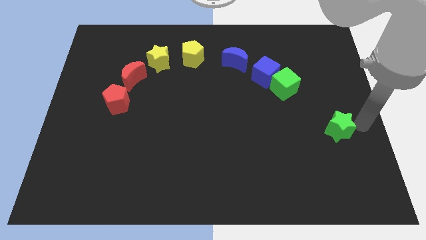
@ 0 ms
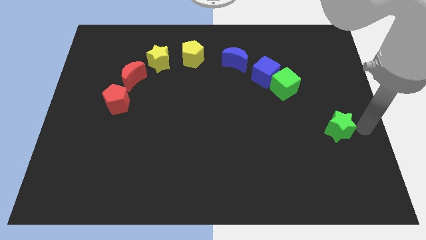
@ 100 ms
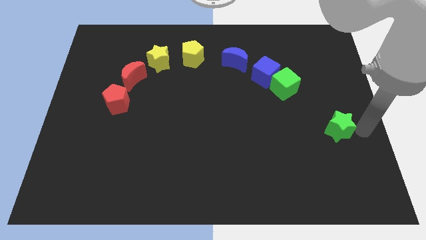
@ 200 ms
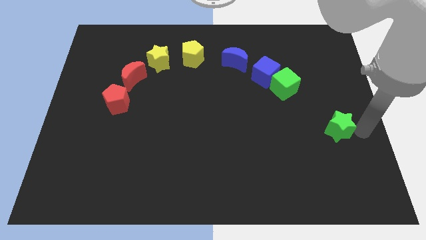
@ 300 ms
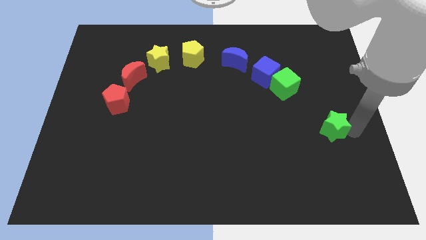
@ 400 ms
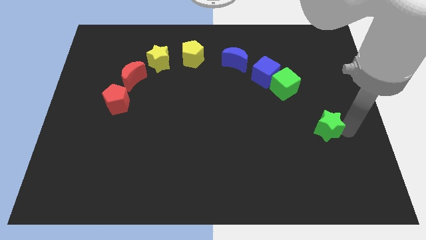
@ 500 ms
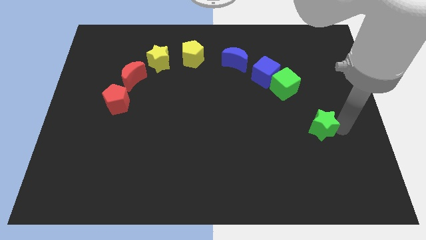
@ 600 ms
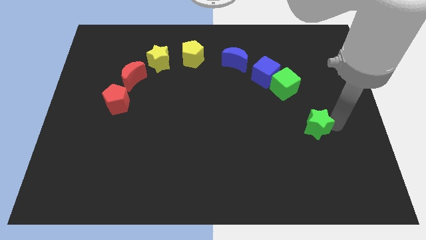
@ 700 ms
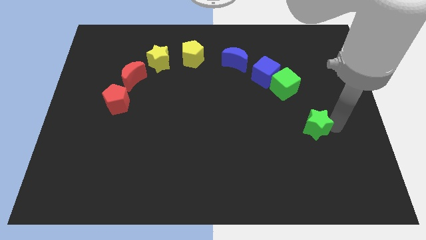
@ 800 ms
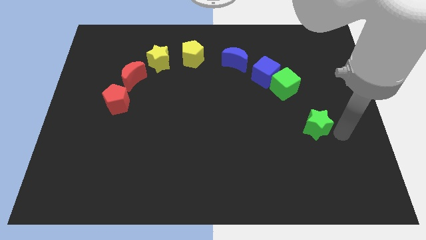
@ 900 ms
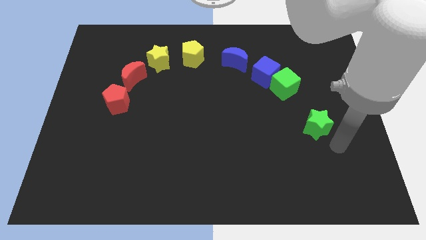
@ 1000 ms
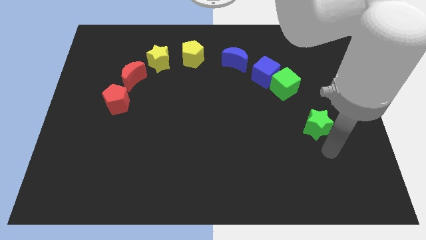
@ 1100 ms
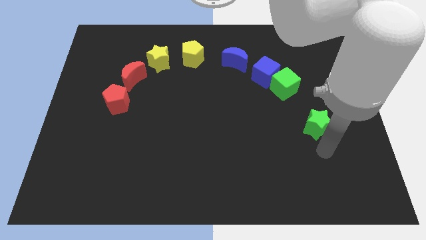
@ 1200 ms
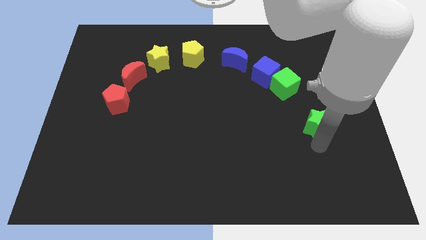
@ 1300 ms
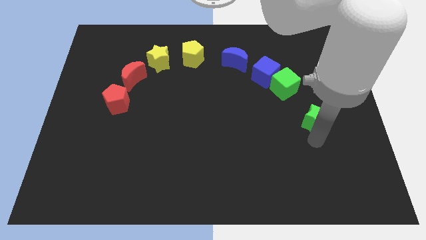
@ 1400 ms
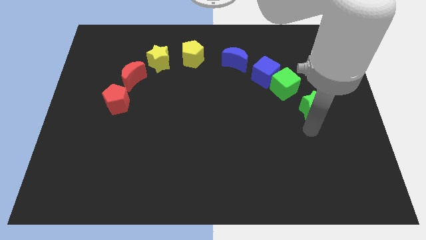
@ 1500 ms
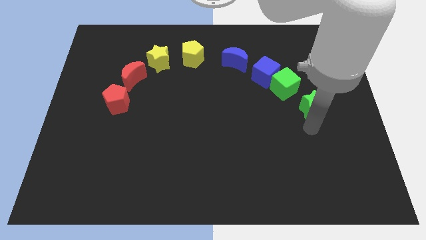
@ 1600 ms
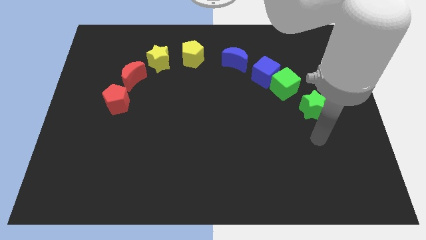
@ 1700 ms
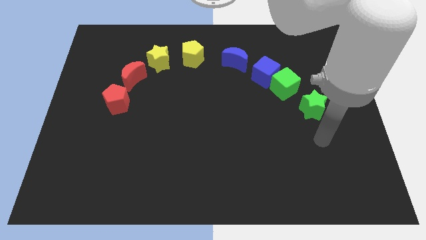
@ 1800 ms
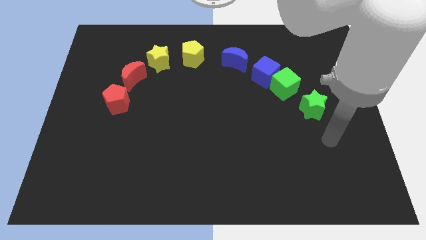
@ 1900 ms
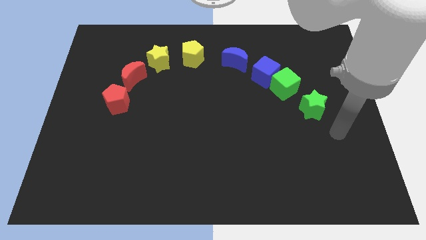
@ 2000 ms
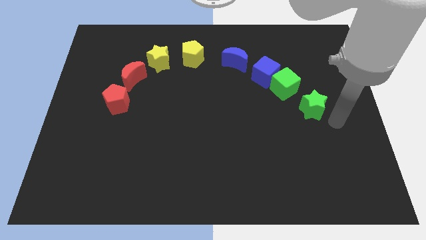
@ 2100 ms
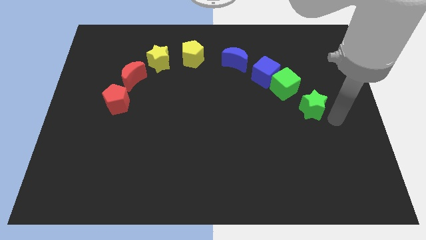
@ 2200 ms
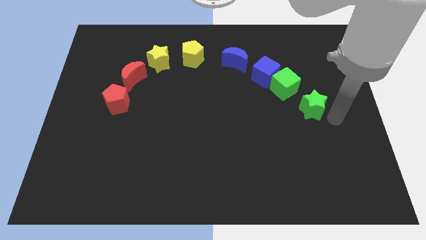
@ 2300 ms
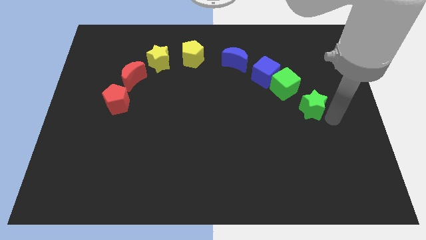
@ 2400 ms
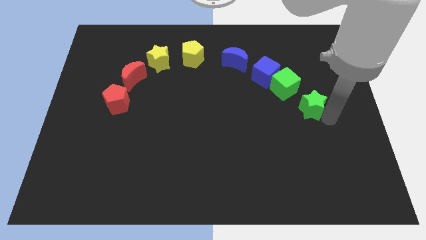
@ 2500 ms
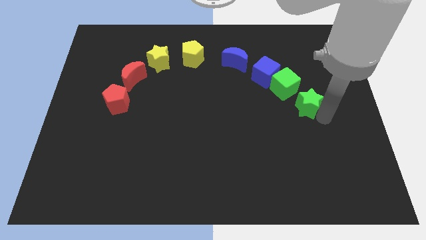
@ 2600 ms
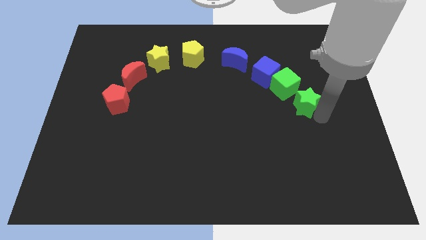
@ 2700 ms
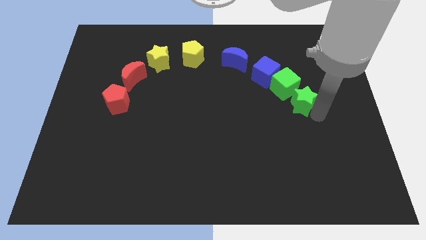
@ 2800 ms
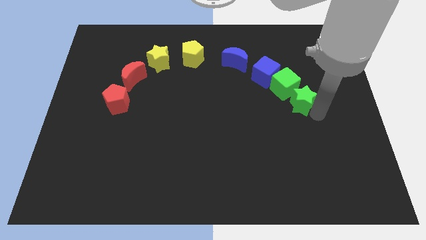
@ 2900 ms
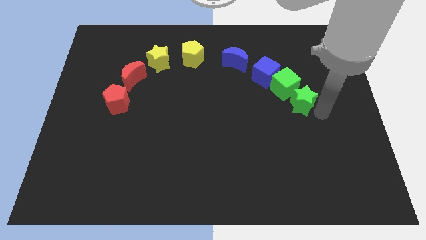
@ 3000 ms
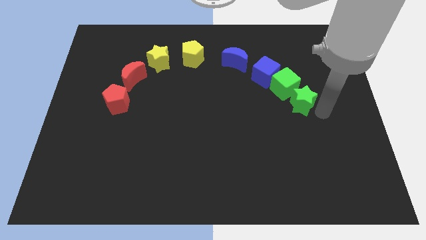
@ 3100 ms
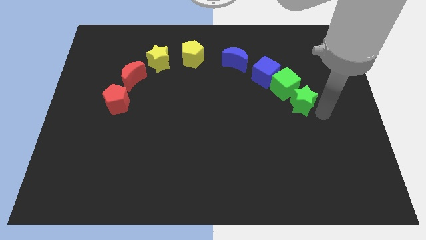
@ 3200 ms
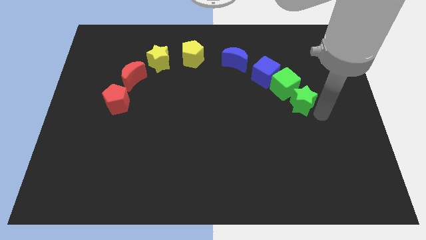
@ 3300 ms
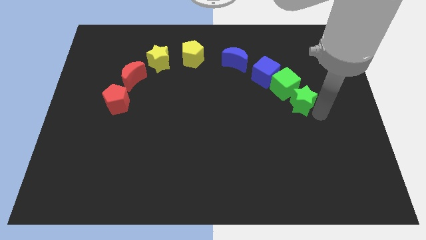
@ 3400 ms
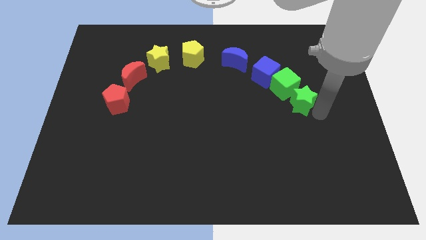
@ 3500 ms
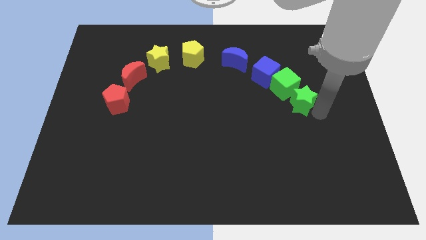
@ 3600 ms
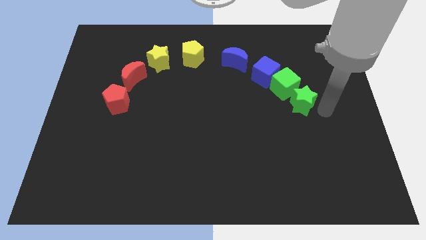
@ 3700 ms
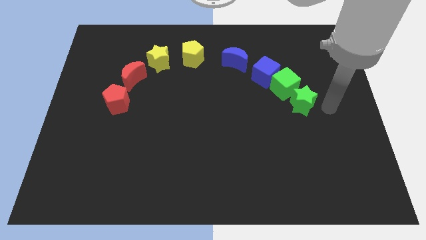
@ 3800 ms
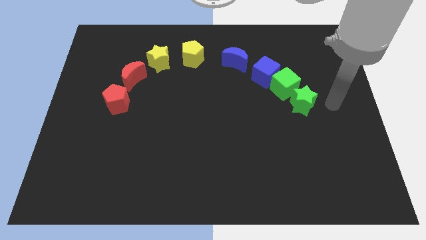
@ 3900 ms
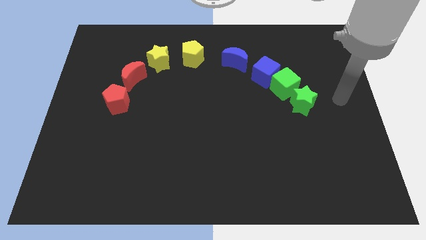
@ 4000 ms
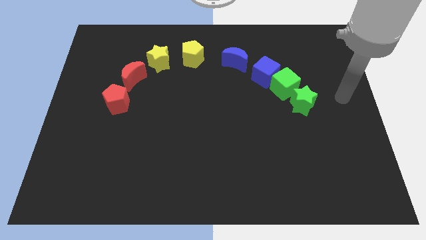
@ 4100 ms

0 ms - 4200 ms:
move the green star to the bottom side of the green cube

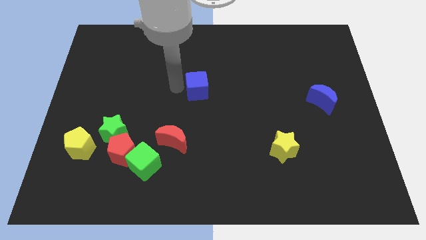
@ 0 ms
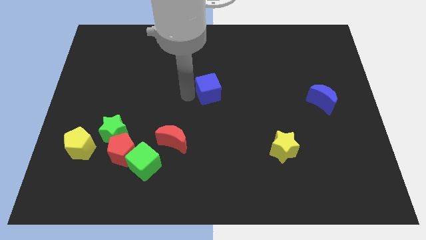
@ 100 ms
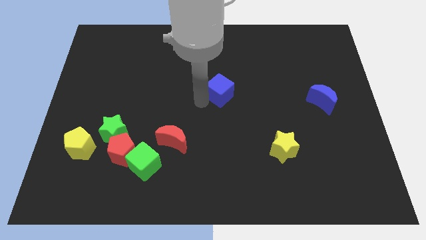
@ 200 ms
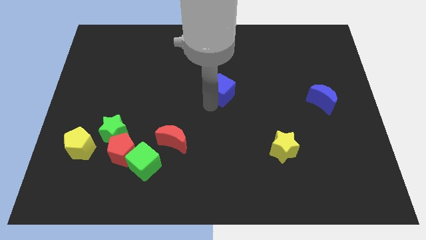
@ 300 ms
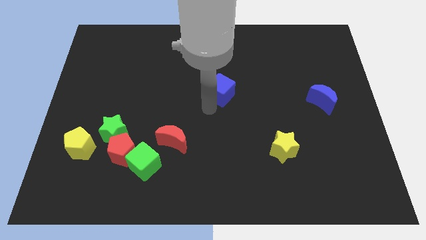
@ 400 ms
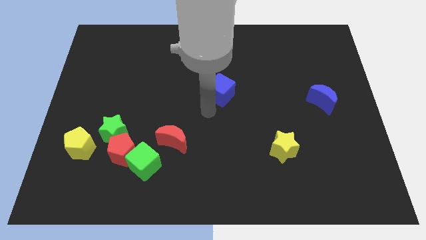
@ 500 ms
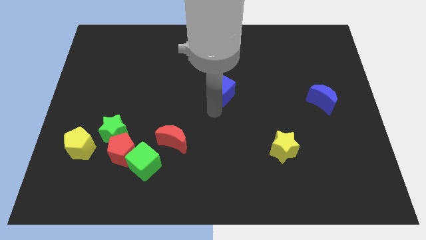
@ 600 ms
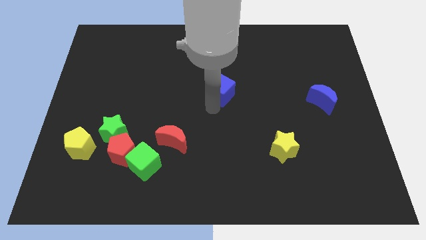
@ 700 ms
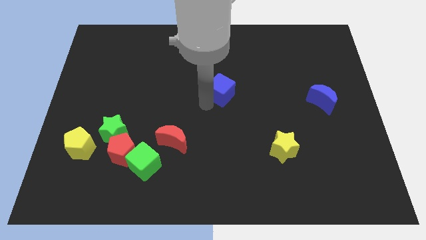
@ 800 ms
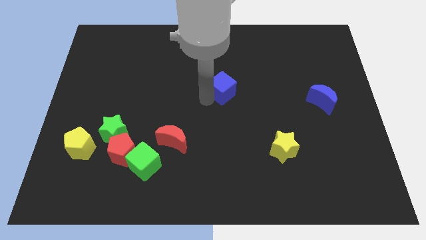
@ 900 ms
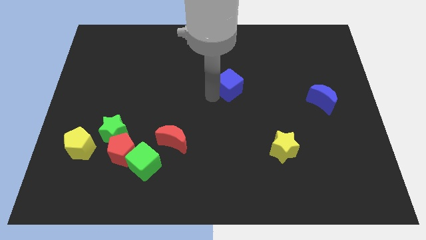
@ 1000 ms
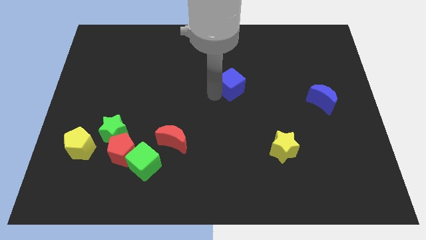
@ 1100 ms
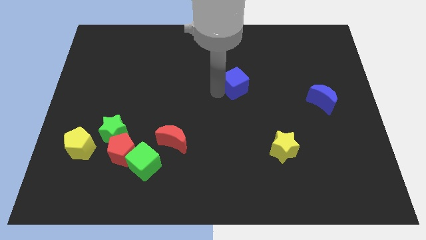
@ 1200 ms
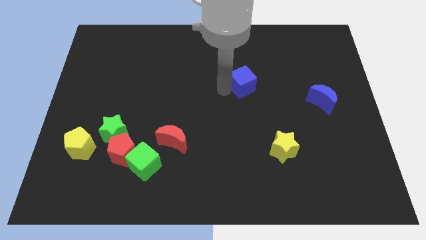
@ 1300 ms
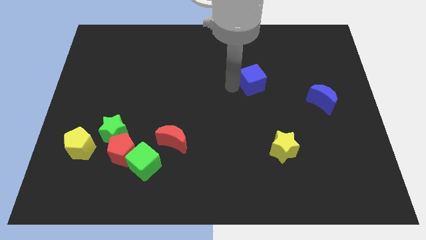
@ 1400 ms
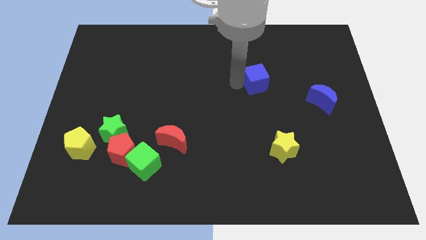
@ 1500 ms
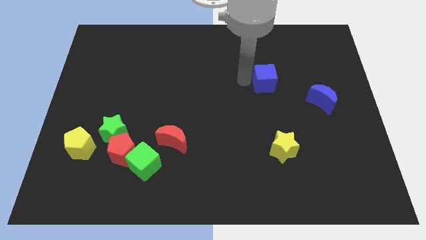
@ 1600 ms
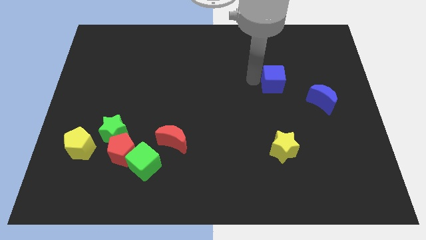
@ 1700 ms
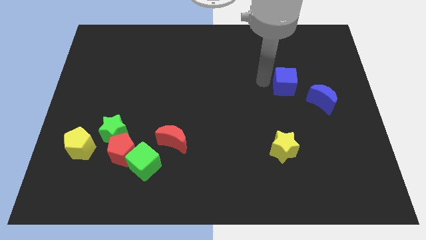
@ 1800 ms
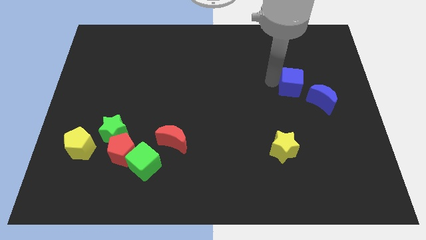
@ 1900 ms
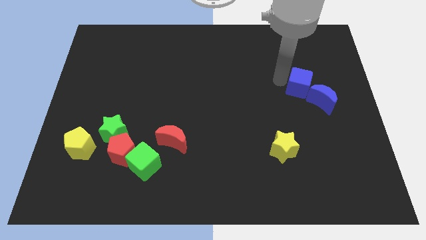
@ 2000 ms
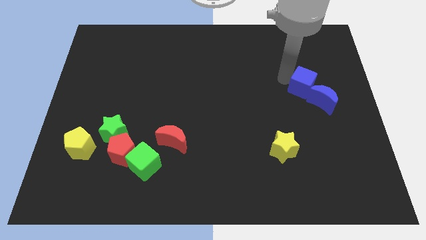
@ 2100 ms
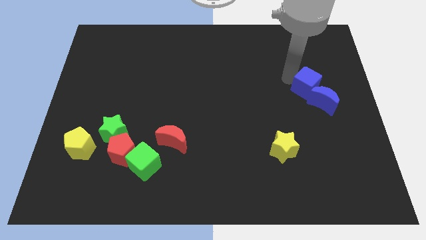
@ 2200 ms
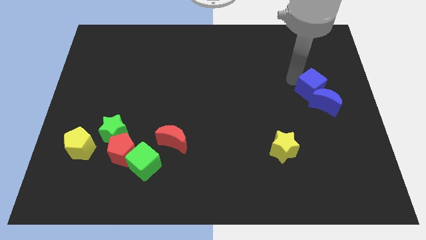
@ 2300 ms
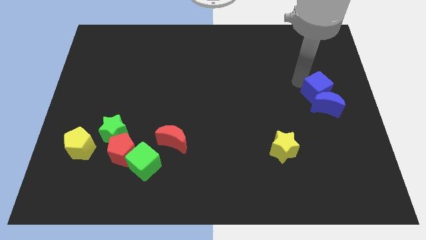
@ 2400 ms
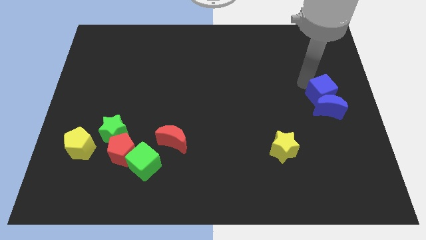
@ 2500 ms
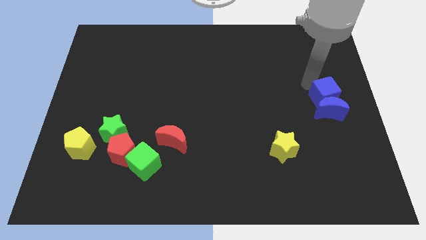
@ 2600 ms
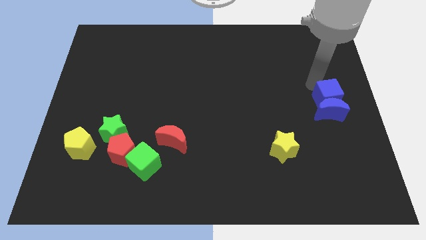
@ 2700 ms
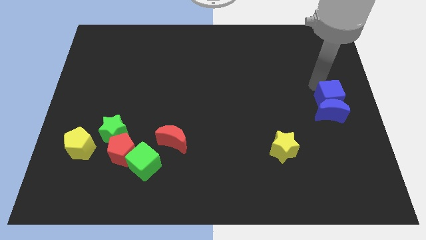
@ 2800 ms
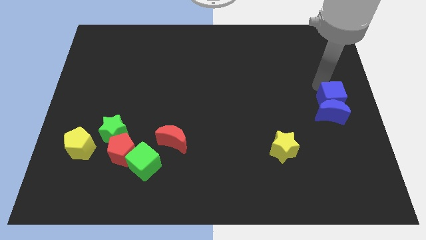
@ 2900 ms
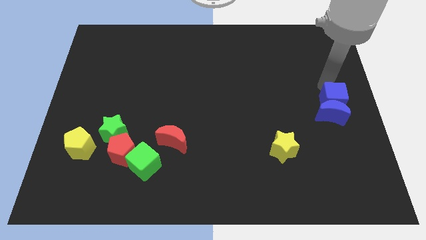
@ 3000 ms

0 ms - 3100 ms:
push blue cube on top of blue moon

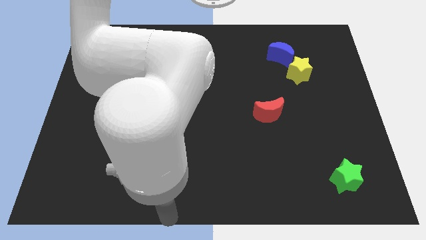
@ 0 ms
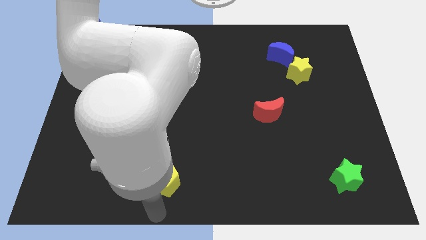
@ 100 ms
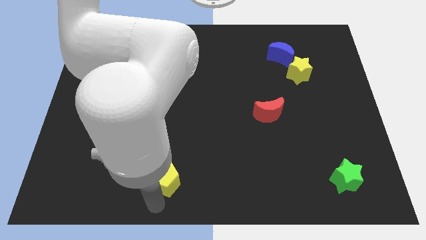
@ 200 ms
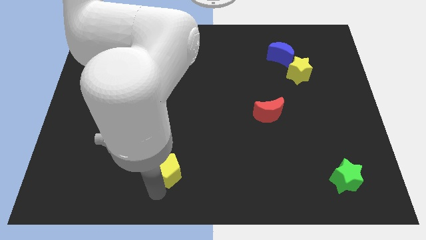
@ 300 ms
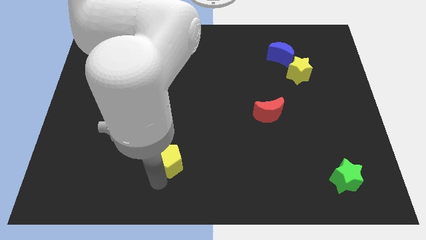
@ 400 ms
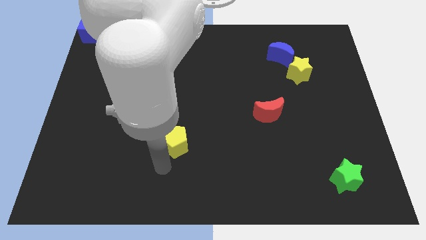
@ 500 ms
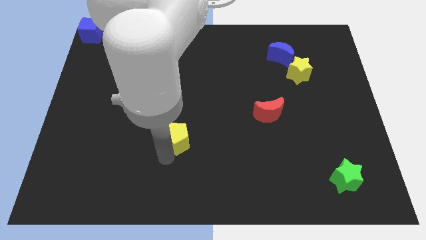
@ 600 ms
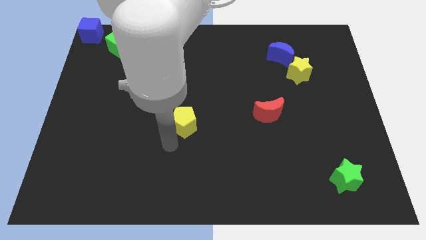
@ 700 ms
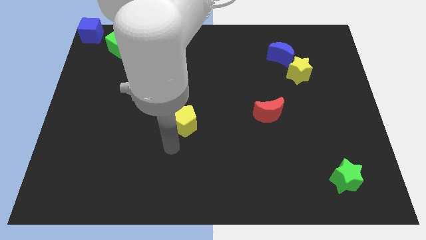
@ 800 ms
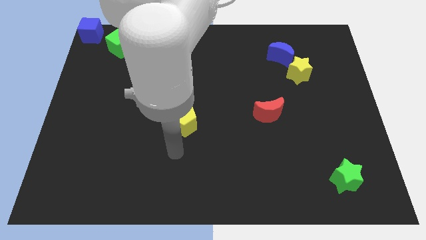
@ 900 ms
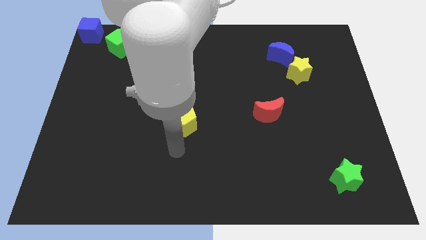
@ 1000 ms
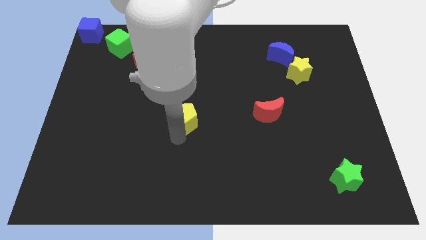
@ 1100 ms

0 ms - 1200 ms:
move the yellow pentagon to the left of the red moon

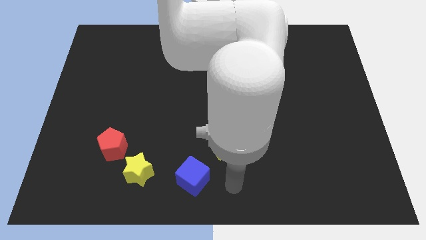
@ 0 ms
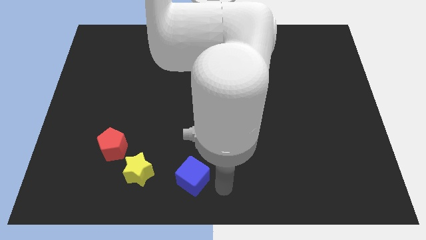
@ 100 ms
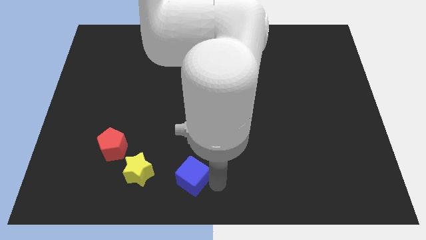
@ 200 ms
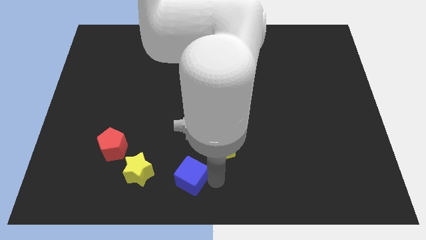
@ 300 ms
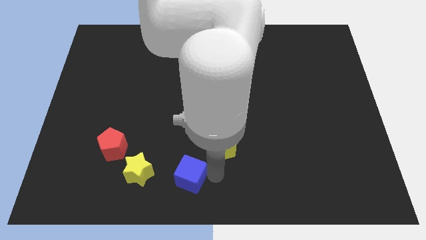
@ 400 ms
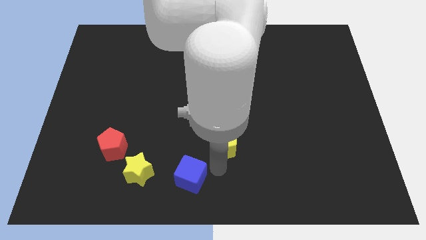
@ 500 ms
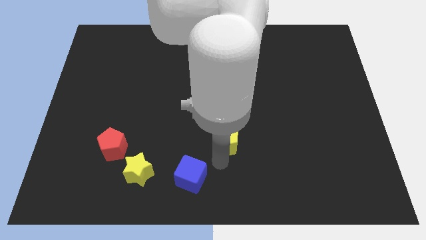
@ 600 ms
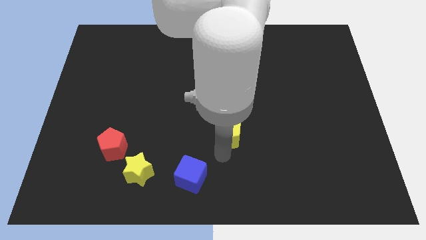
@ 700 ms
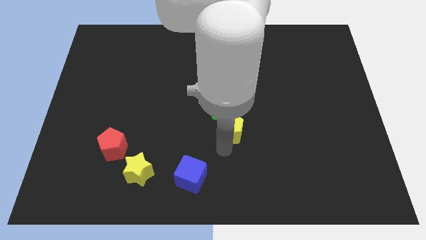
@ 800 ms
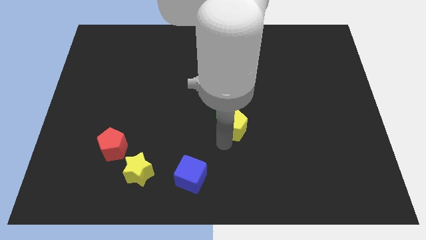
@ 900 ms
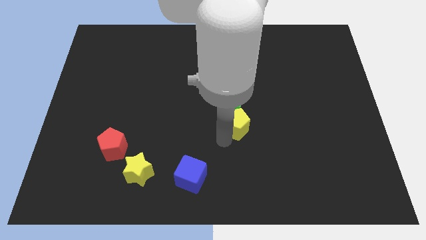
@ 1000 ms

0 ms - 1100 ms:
move yellow pentagon into green cube
